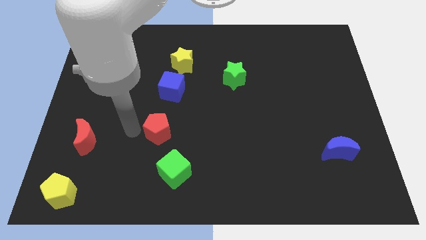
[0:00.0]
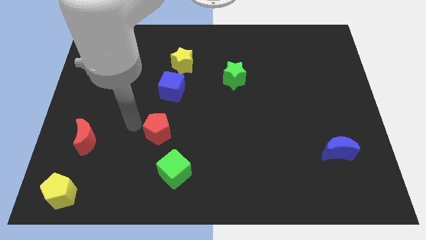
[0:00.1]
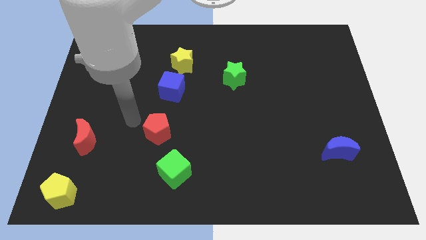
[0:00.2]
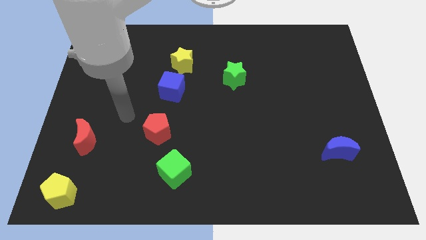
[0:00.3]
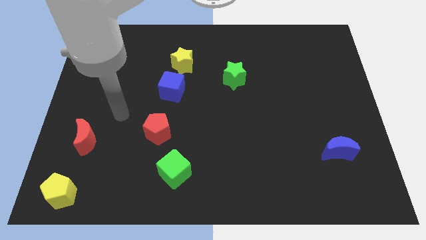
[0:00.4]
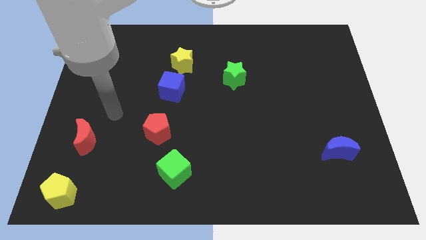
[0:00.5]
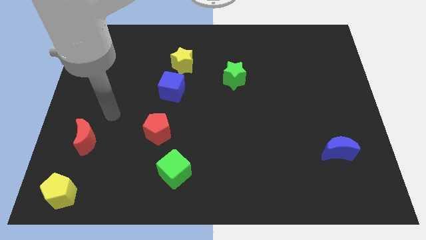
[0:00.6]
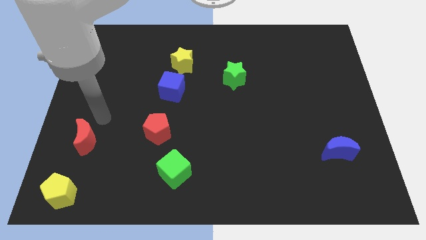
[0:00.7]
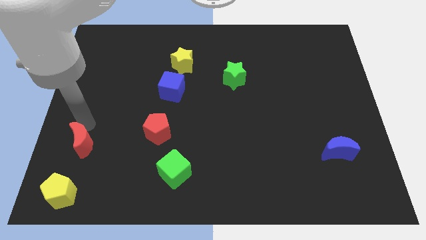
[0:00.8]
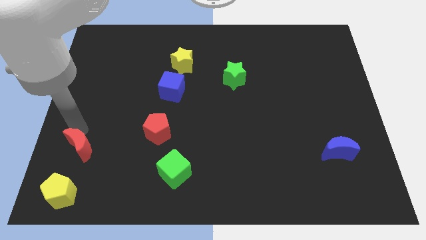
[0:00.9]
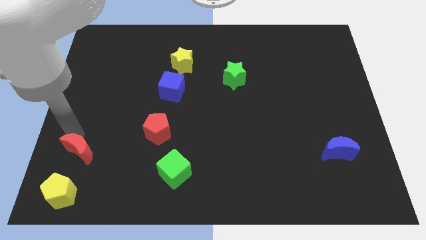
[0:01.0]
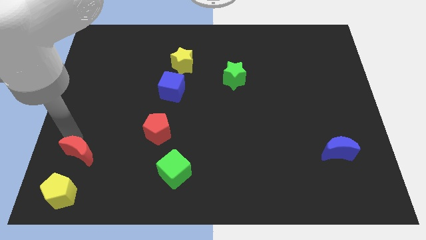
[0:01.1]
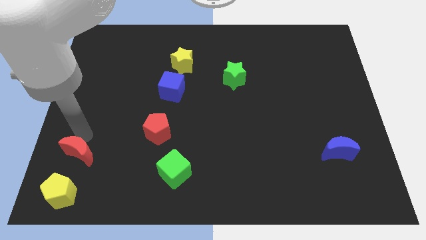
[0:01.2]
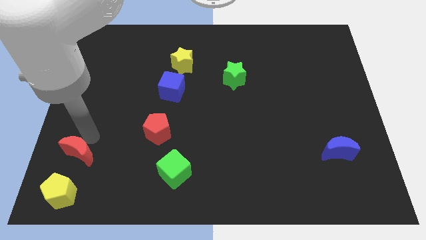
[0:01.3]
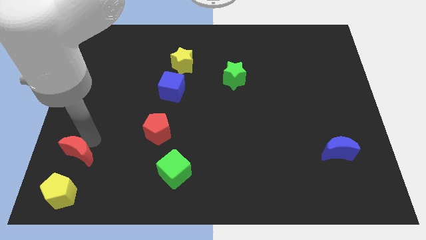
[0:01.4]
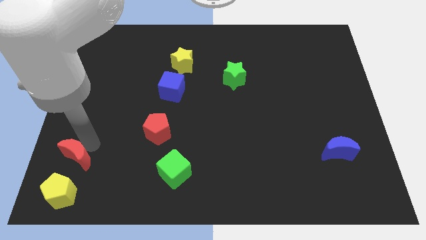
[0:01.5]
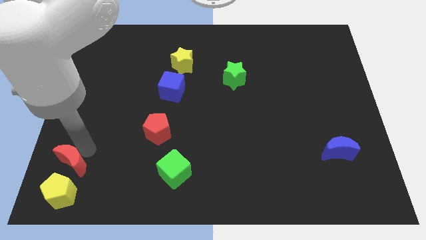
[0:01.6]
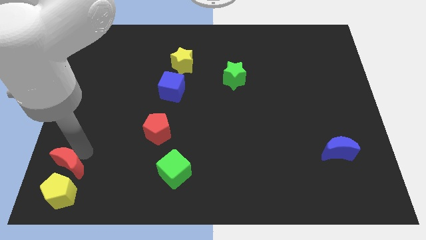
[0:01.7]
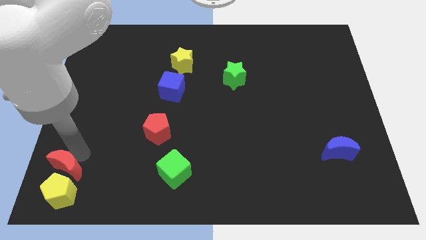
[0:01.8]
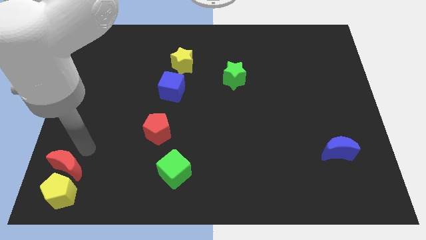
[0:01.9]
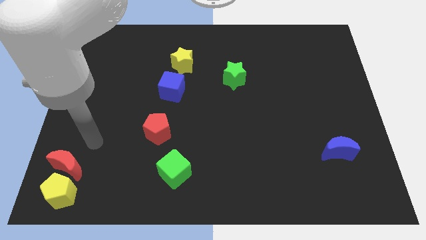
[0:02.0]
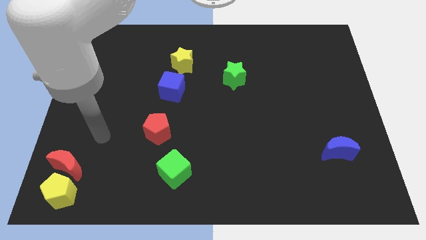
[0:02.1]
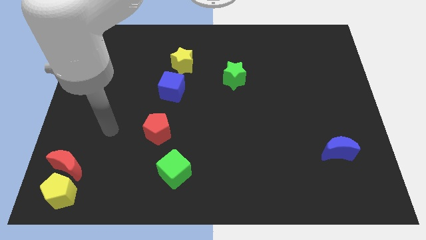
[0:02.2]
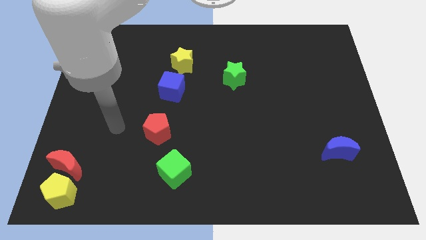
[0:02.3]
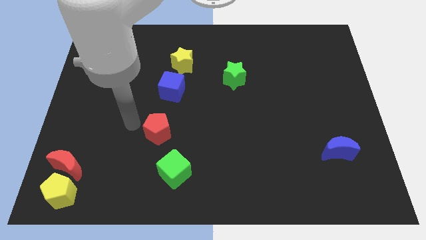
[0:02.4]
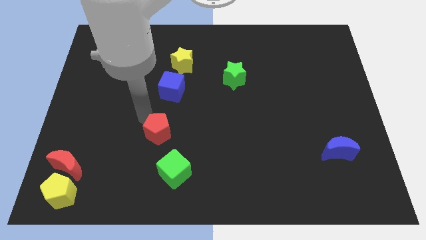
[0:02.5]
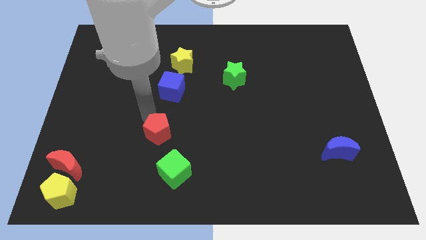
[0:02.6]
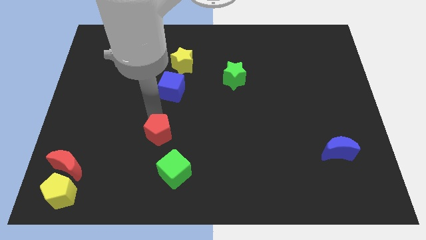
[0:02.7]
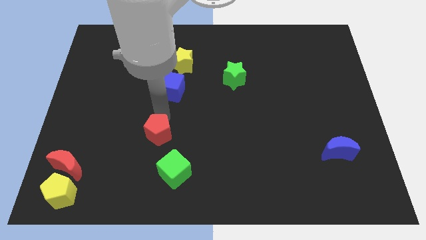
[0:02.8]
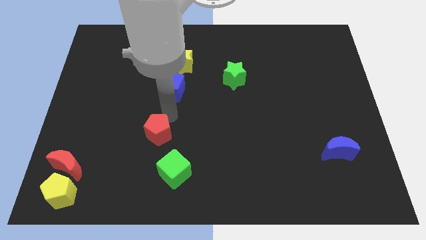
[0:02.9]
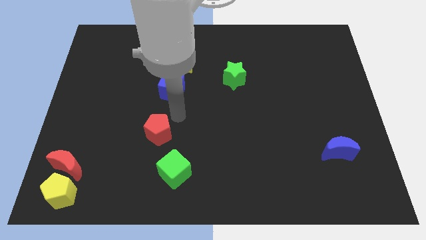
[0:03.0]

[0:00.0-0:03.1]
place the red crescent above the yellow pentagon

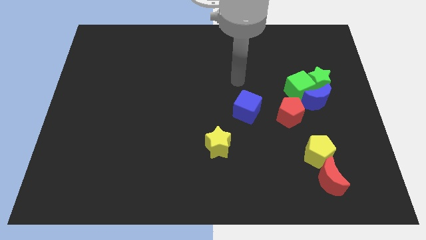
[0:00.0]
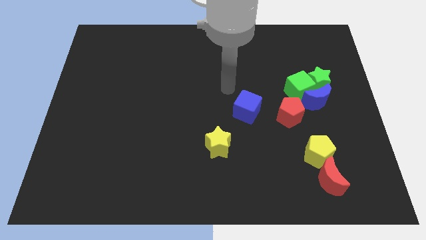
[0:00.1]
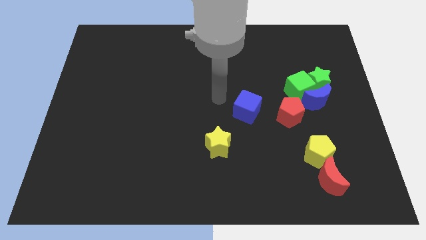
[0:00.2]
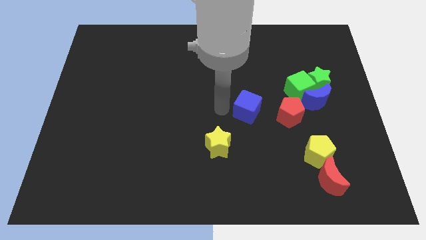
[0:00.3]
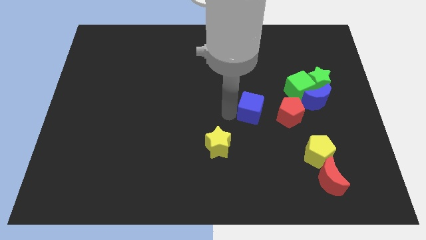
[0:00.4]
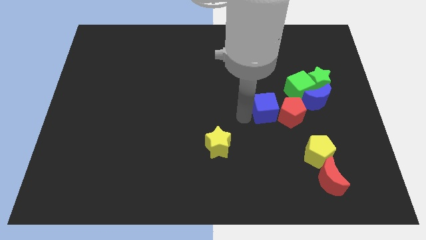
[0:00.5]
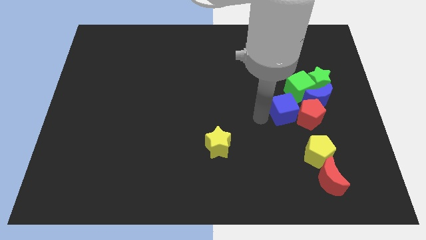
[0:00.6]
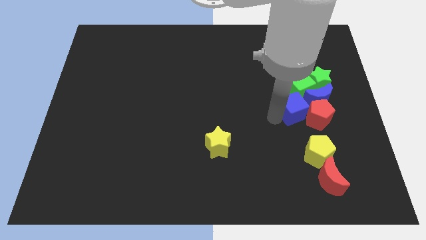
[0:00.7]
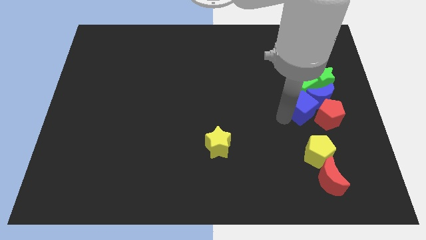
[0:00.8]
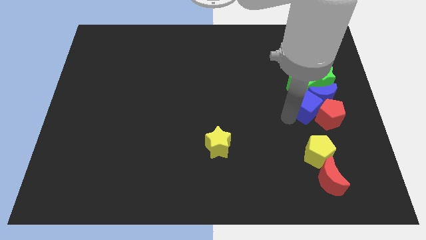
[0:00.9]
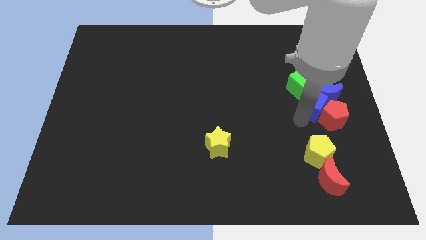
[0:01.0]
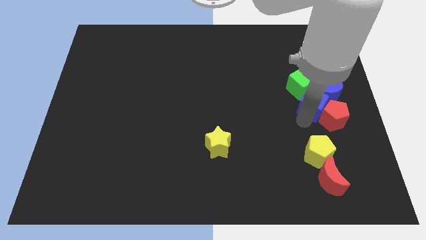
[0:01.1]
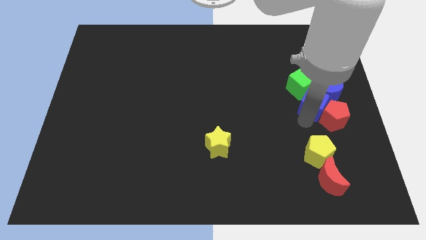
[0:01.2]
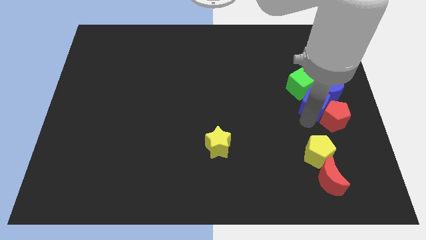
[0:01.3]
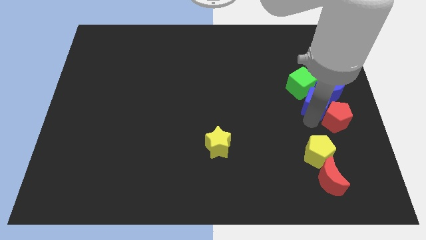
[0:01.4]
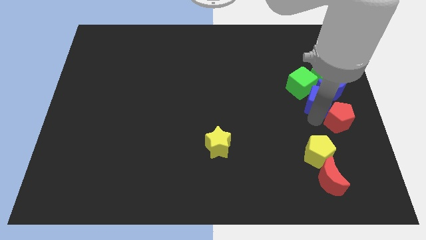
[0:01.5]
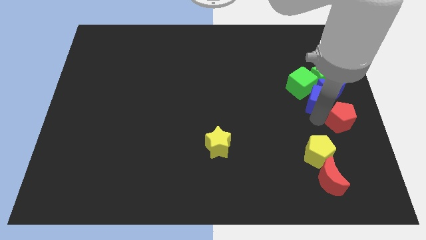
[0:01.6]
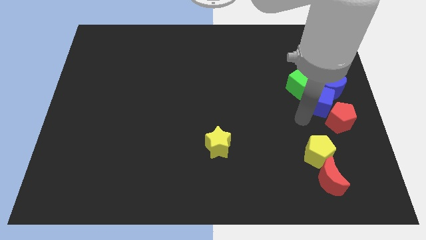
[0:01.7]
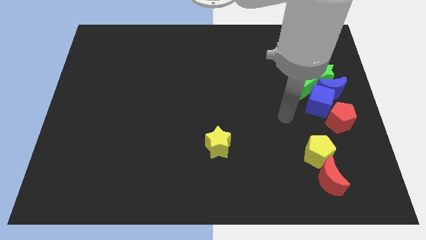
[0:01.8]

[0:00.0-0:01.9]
place the blue blocks below the green blocks

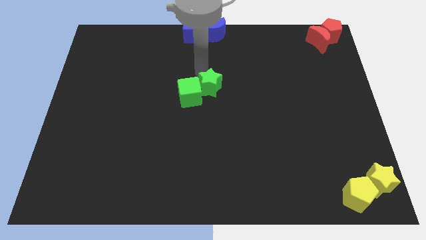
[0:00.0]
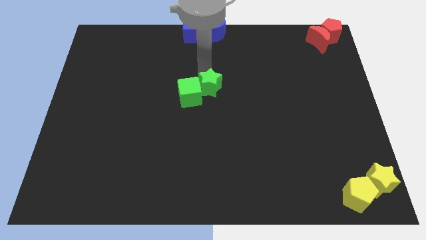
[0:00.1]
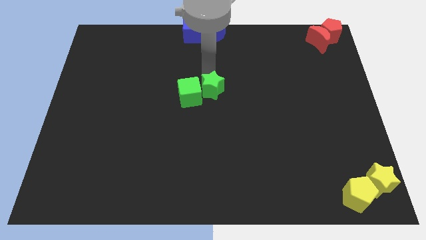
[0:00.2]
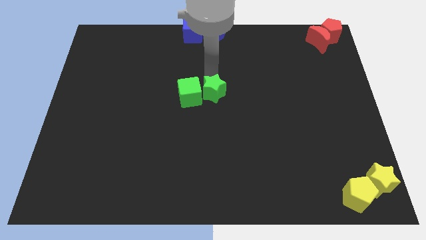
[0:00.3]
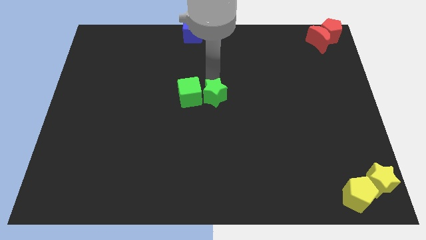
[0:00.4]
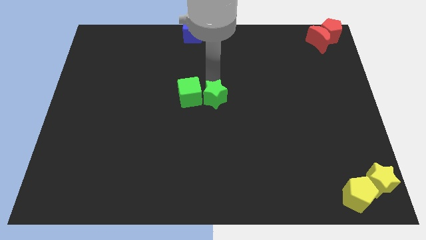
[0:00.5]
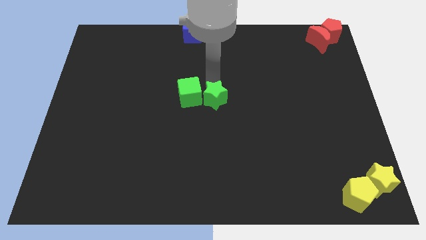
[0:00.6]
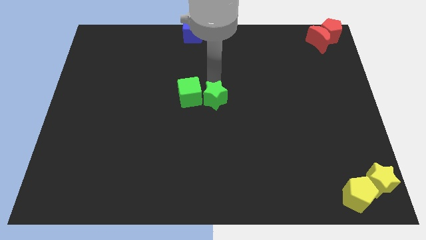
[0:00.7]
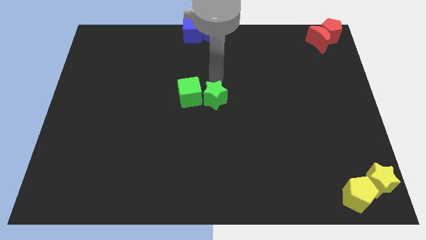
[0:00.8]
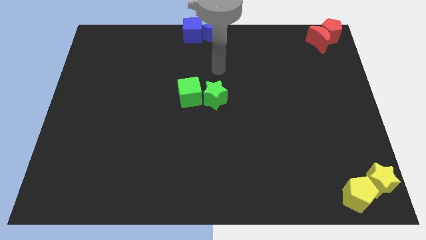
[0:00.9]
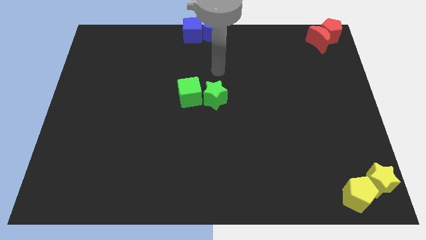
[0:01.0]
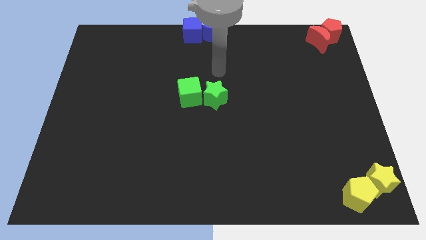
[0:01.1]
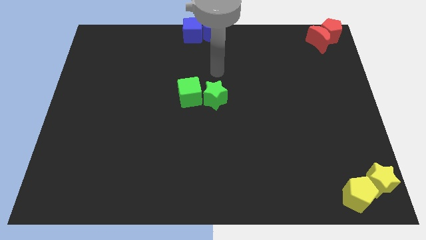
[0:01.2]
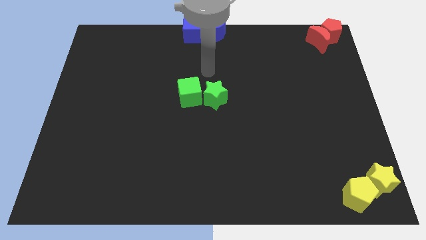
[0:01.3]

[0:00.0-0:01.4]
push the green star slightly down

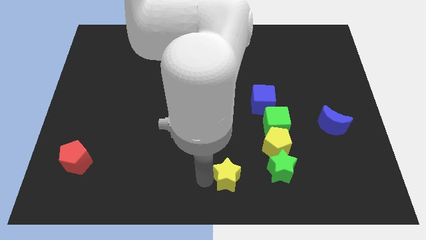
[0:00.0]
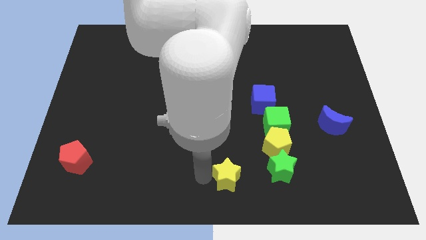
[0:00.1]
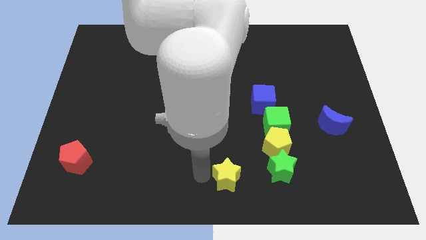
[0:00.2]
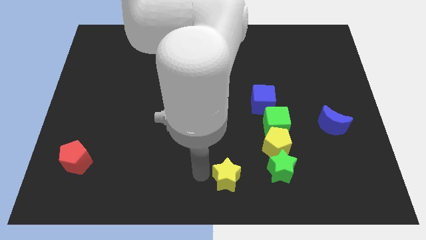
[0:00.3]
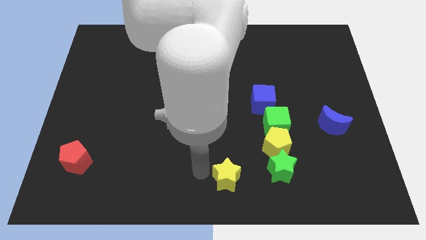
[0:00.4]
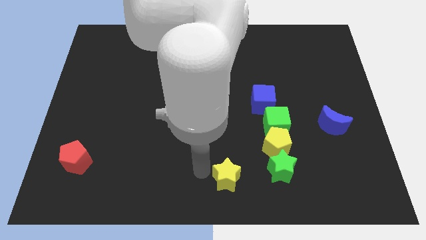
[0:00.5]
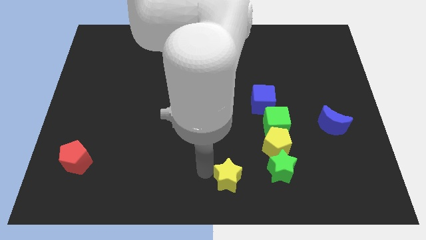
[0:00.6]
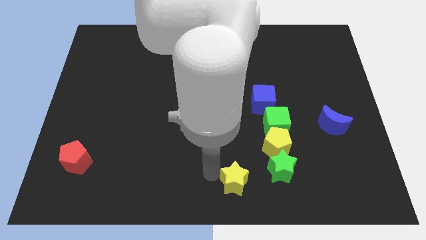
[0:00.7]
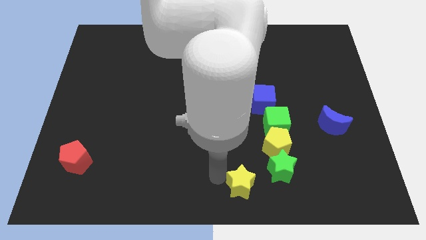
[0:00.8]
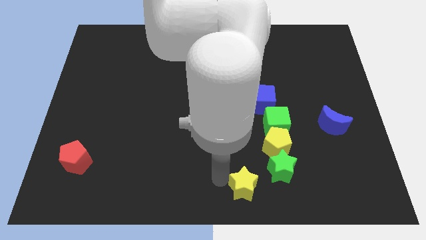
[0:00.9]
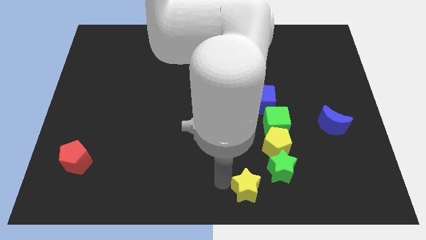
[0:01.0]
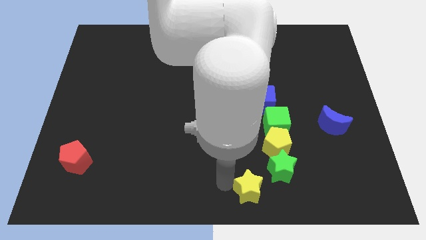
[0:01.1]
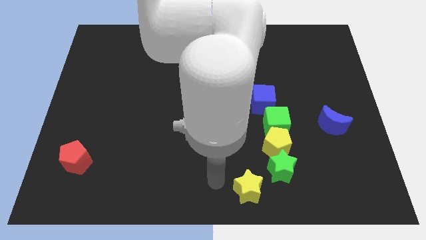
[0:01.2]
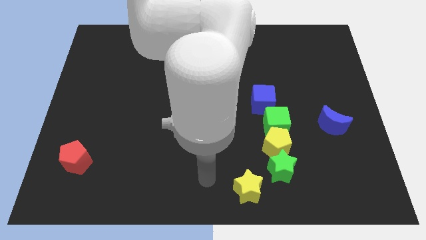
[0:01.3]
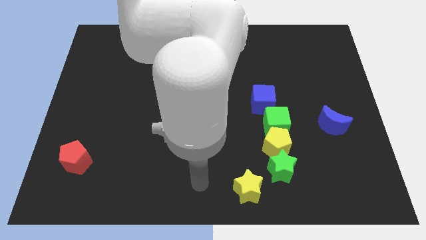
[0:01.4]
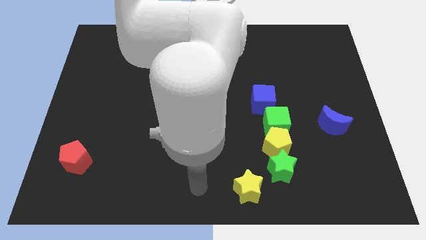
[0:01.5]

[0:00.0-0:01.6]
place yellow star to the bottom left of the green star

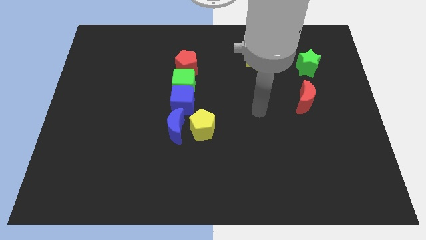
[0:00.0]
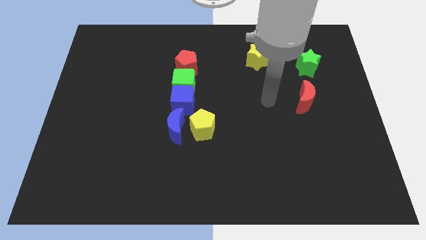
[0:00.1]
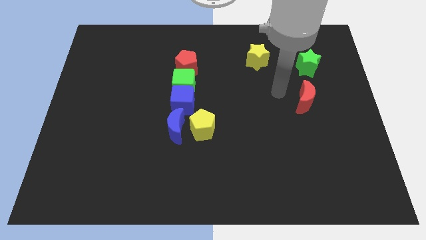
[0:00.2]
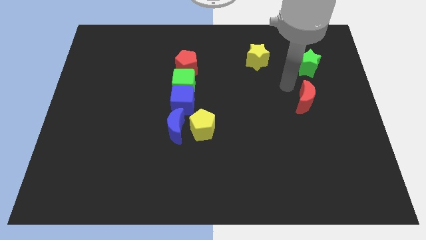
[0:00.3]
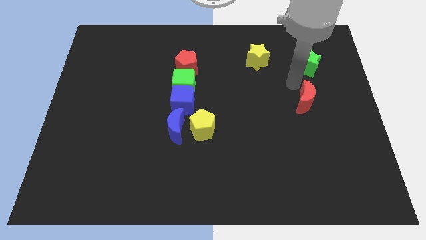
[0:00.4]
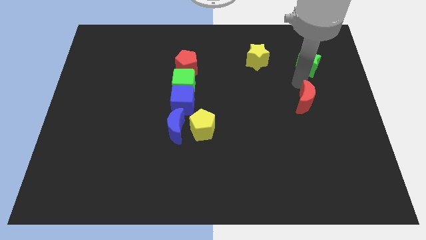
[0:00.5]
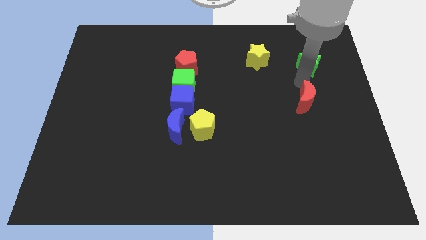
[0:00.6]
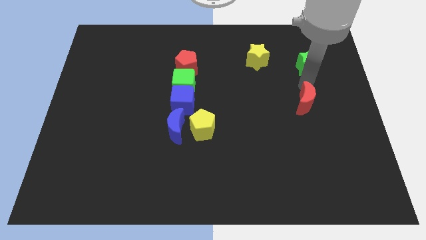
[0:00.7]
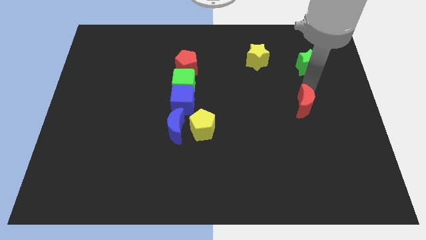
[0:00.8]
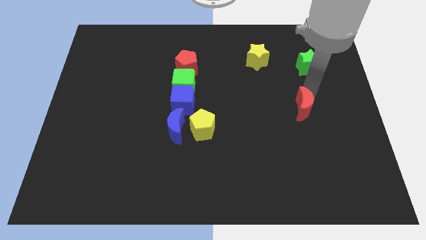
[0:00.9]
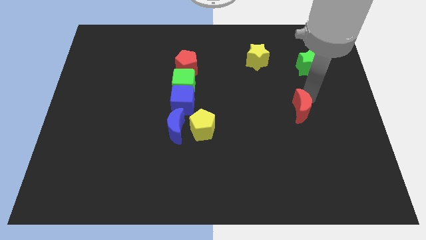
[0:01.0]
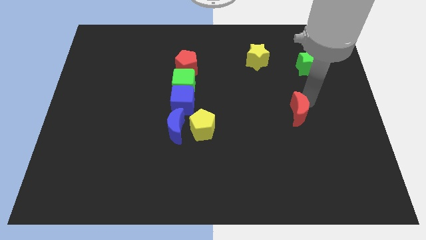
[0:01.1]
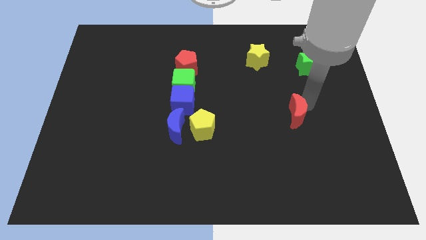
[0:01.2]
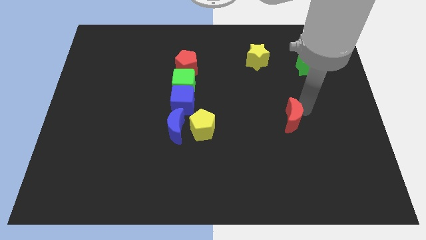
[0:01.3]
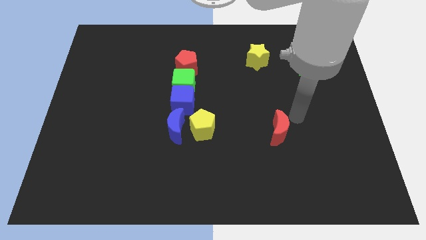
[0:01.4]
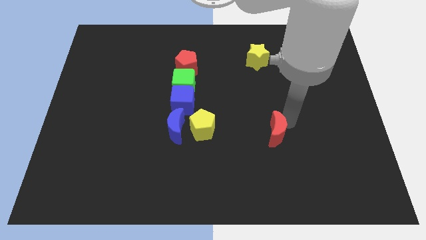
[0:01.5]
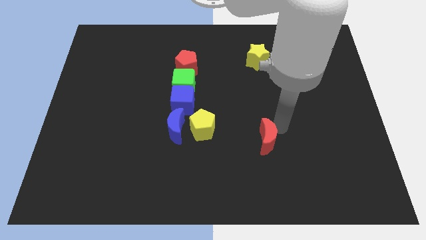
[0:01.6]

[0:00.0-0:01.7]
place the red moon to the right of the yellow pentagon
